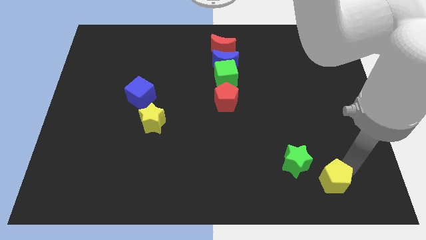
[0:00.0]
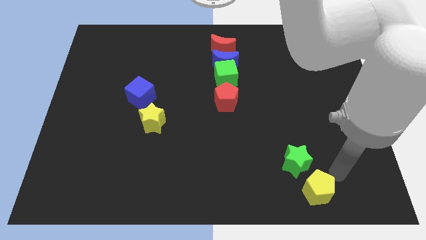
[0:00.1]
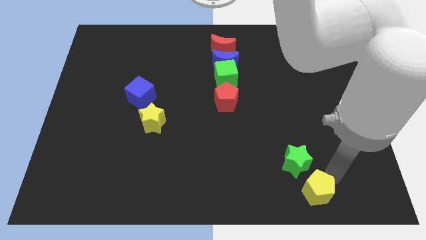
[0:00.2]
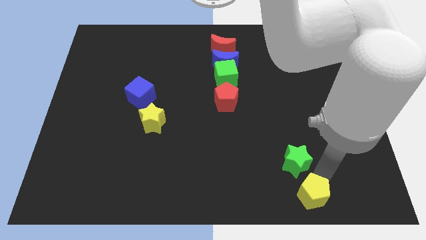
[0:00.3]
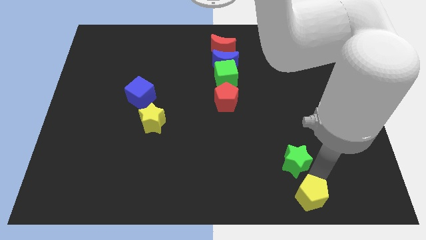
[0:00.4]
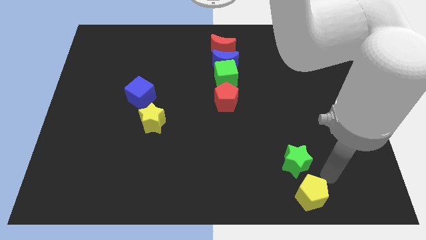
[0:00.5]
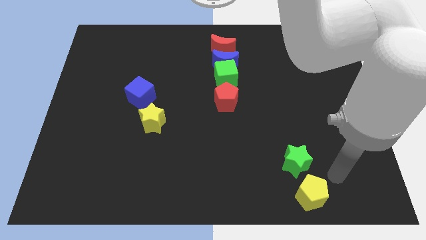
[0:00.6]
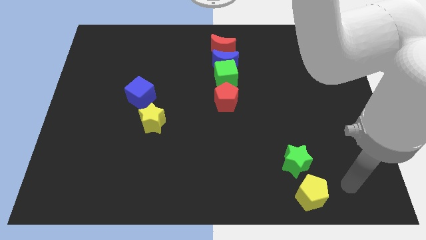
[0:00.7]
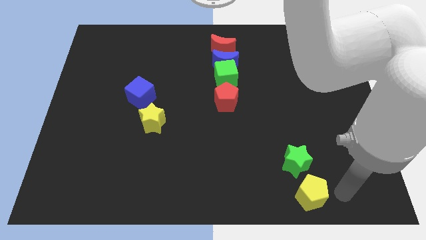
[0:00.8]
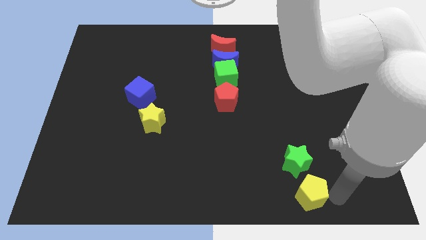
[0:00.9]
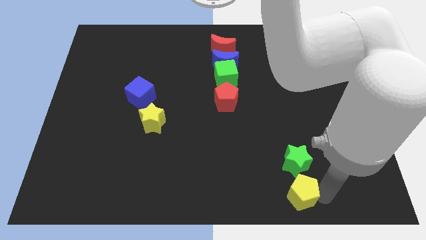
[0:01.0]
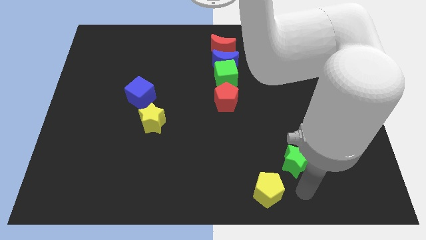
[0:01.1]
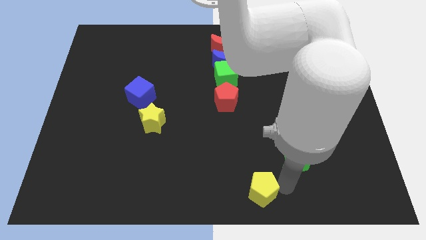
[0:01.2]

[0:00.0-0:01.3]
slide the yellow pentagon diagonally bottom left to the green star

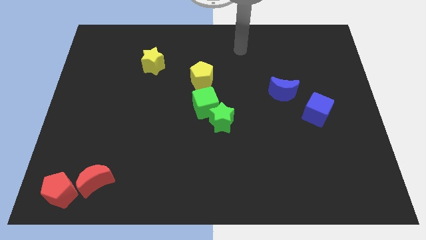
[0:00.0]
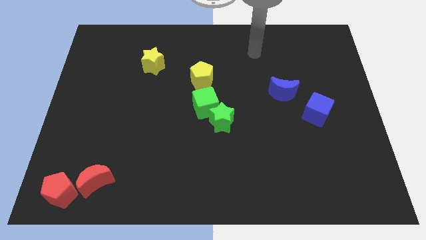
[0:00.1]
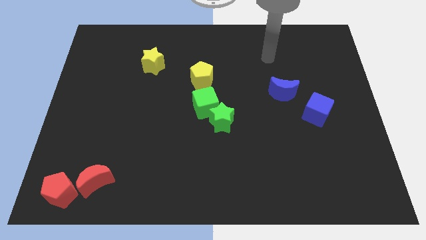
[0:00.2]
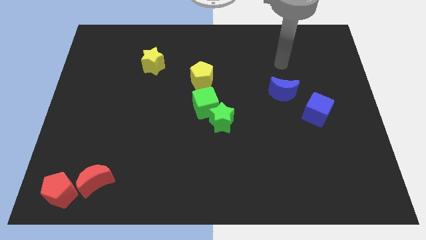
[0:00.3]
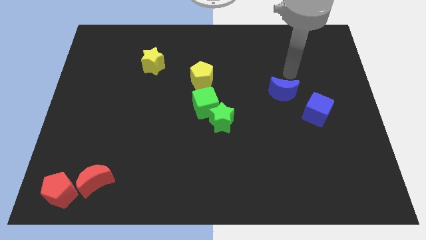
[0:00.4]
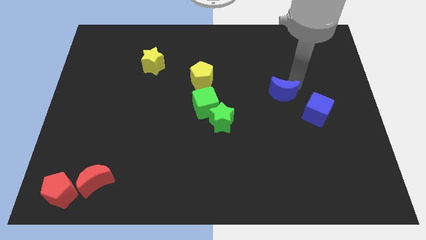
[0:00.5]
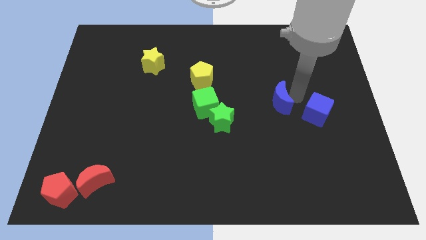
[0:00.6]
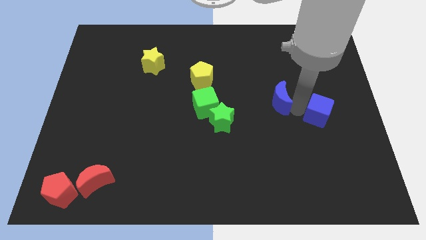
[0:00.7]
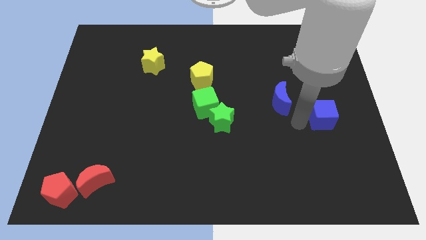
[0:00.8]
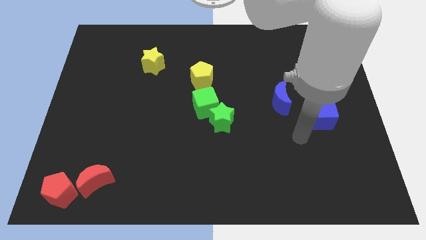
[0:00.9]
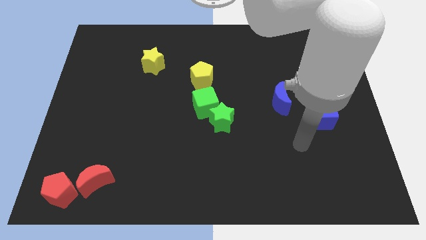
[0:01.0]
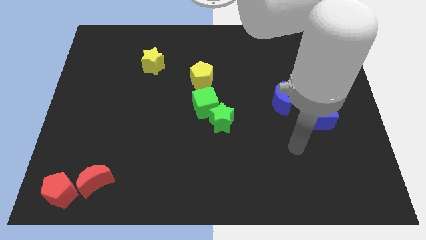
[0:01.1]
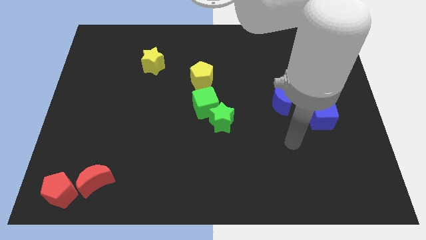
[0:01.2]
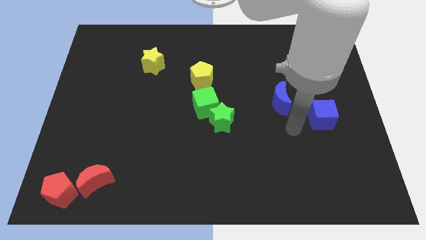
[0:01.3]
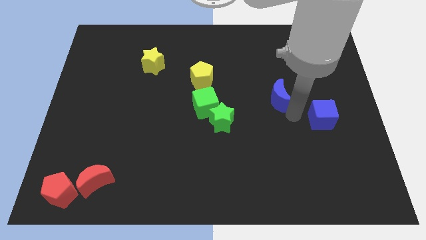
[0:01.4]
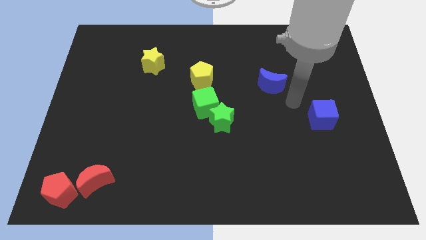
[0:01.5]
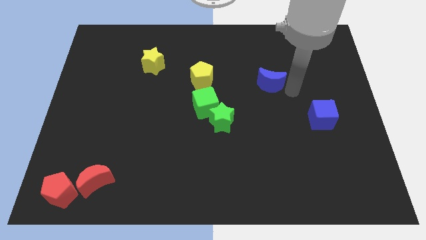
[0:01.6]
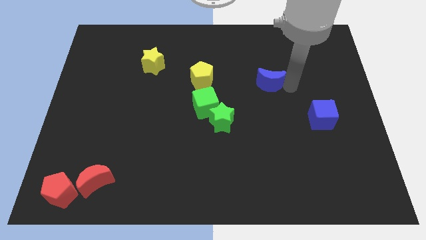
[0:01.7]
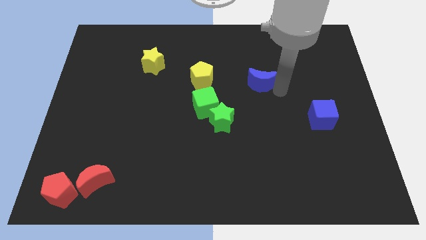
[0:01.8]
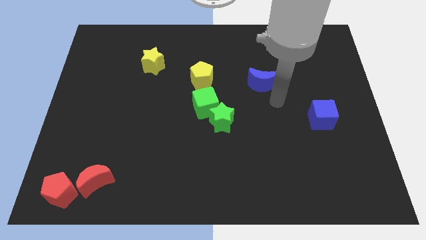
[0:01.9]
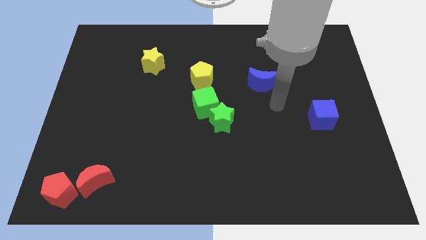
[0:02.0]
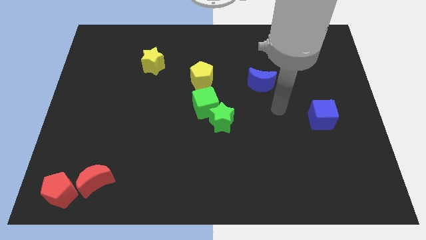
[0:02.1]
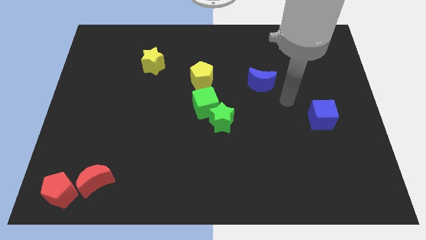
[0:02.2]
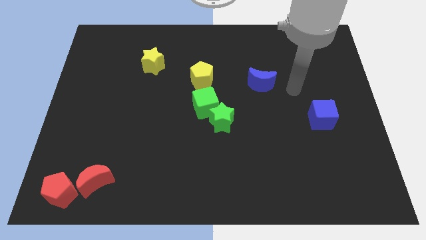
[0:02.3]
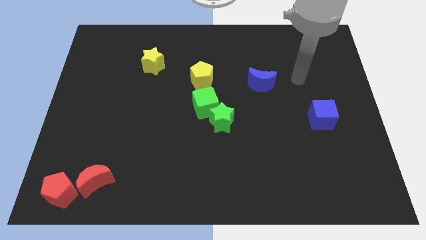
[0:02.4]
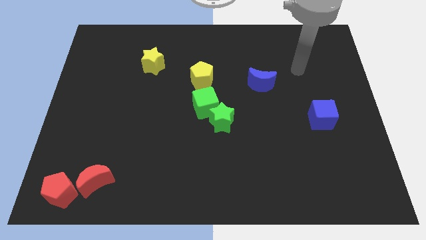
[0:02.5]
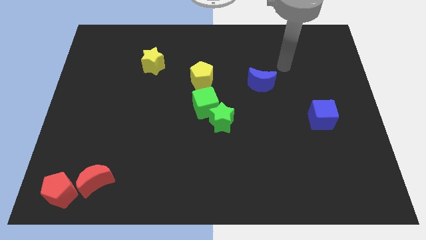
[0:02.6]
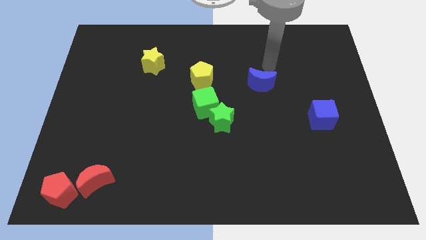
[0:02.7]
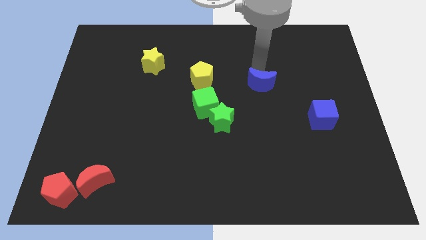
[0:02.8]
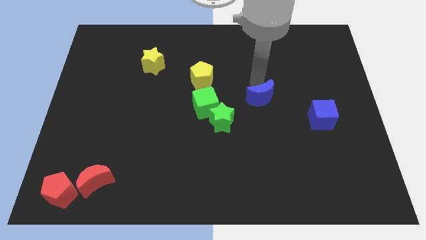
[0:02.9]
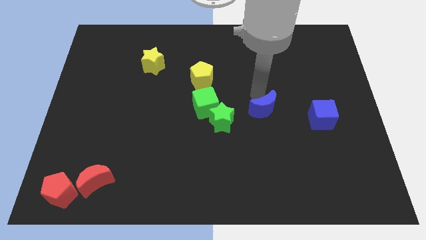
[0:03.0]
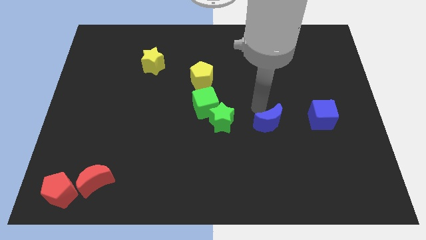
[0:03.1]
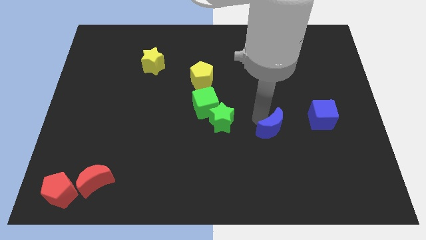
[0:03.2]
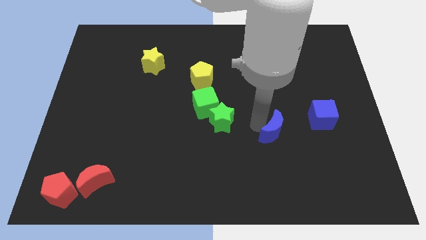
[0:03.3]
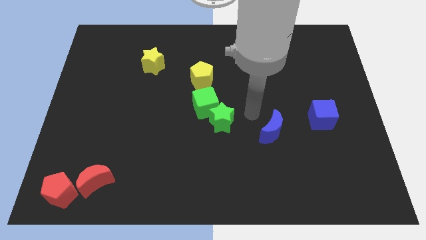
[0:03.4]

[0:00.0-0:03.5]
push the blue moon at the right side of the green star

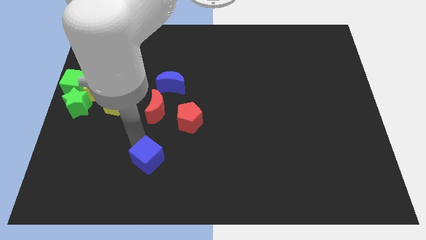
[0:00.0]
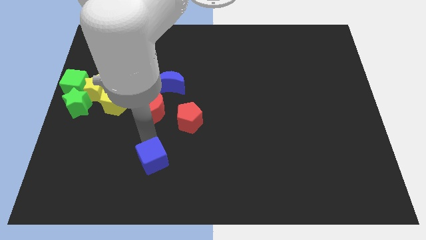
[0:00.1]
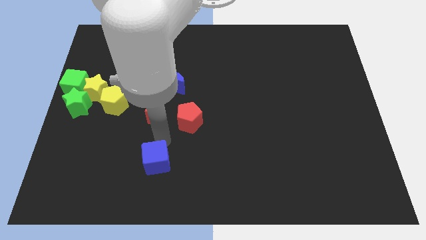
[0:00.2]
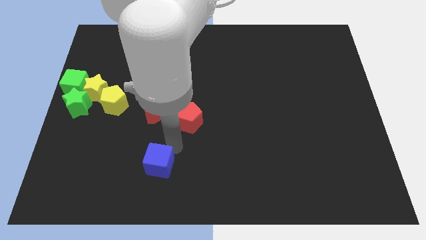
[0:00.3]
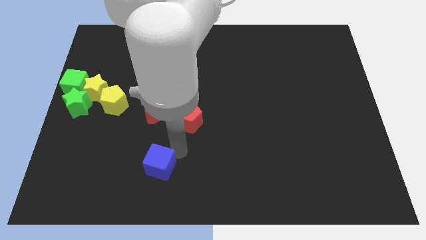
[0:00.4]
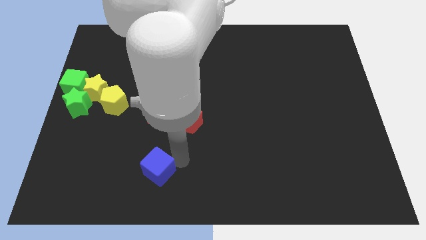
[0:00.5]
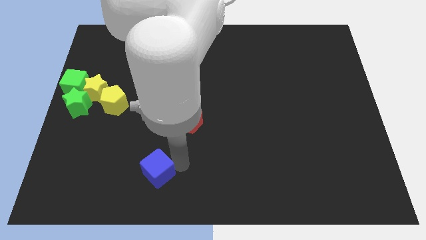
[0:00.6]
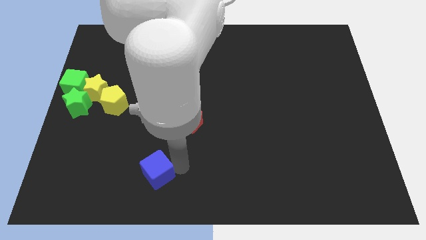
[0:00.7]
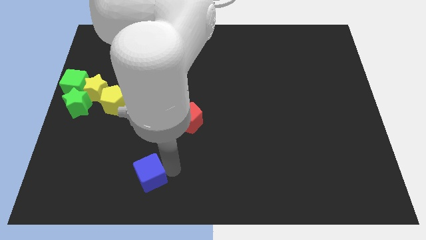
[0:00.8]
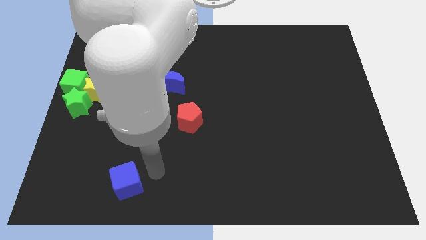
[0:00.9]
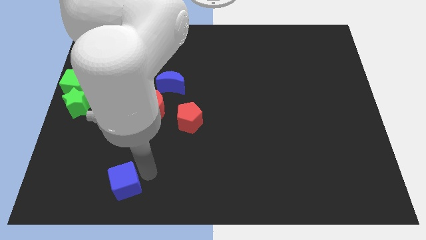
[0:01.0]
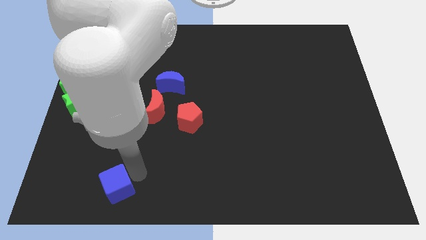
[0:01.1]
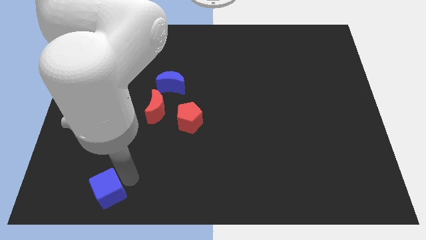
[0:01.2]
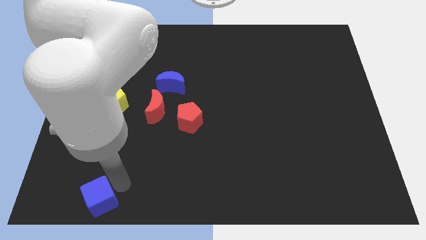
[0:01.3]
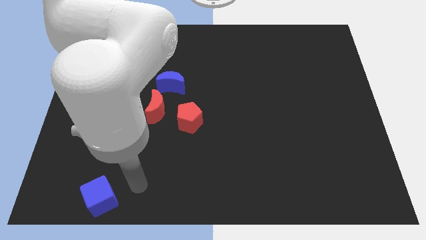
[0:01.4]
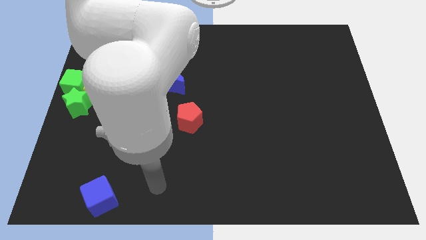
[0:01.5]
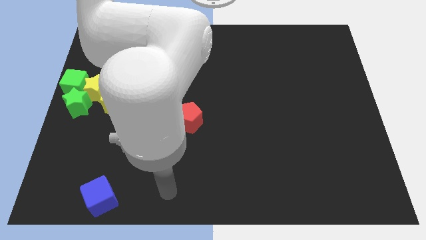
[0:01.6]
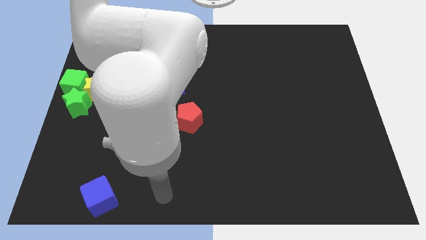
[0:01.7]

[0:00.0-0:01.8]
push the blue cube downwards

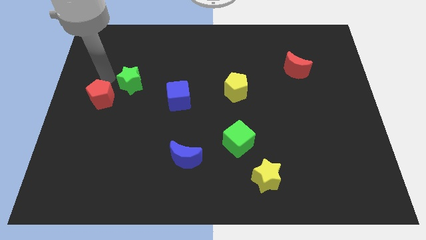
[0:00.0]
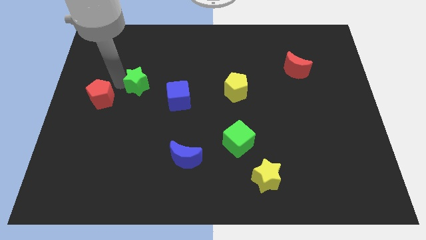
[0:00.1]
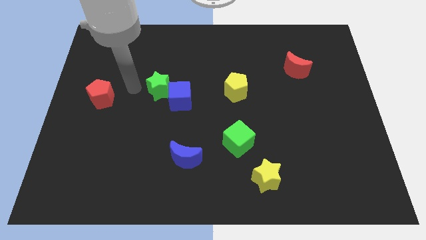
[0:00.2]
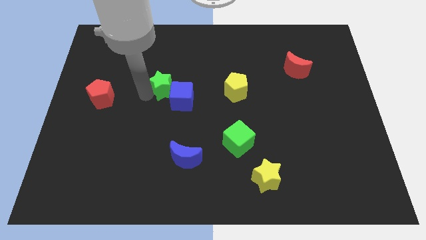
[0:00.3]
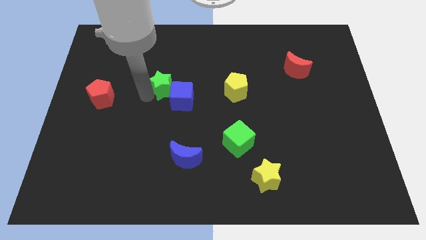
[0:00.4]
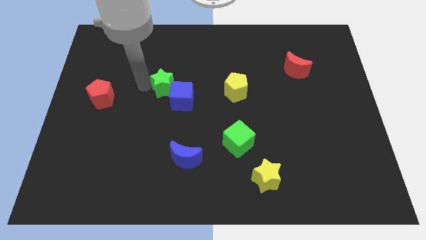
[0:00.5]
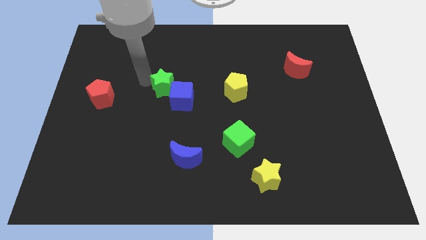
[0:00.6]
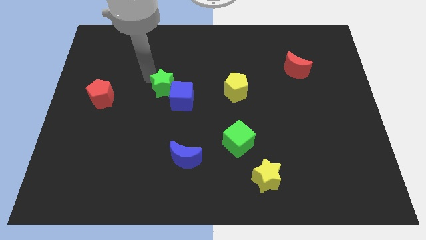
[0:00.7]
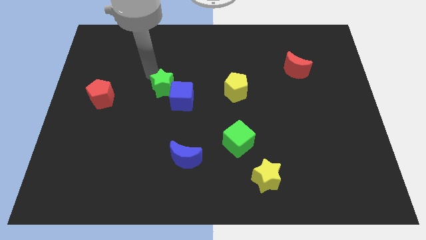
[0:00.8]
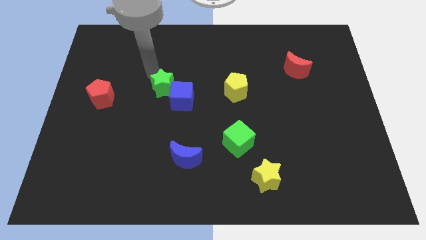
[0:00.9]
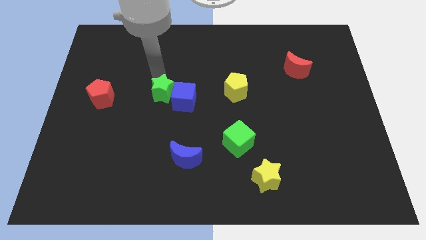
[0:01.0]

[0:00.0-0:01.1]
move the green star left to the blue cube

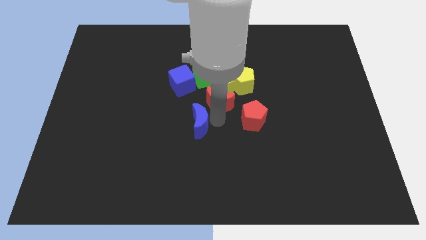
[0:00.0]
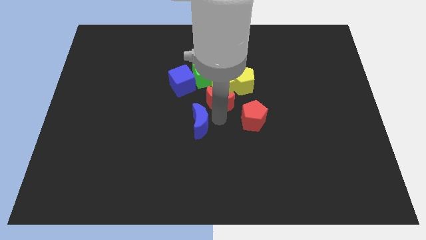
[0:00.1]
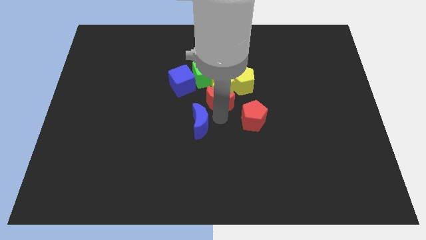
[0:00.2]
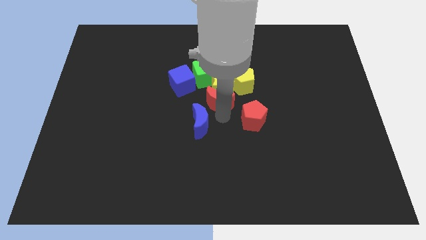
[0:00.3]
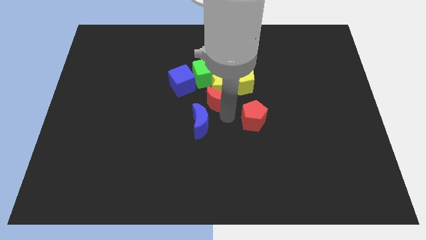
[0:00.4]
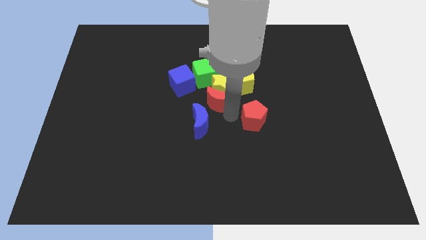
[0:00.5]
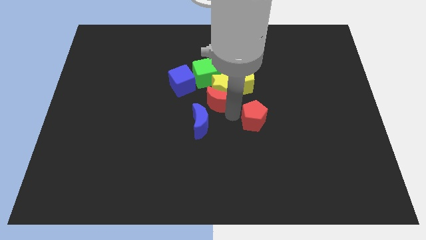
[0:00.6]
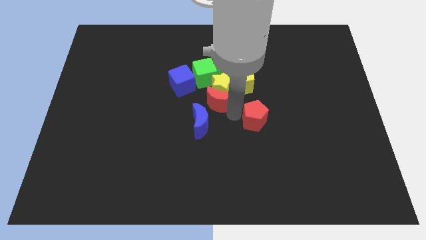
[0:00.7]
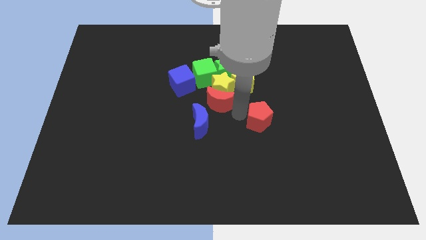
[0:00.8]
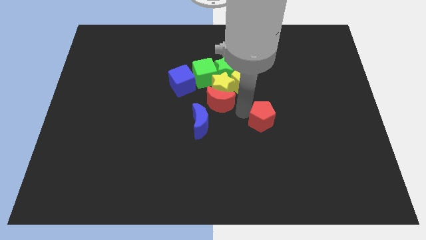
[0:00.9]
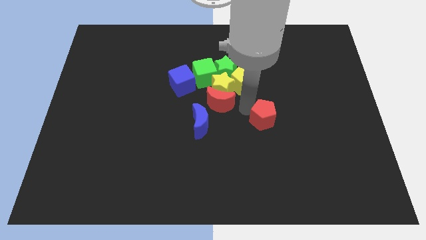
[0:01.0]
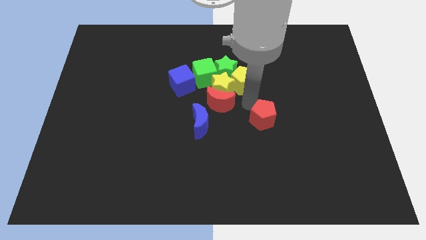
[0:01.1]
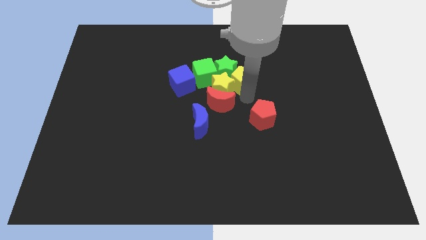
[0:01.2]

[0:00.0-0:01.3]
move the red pentagon slightly towards the right center of the board
